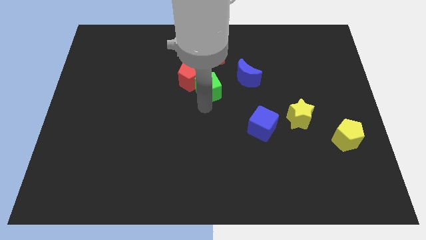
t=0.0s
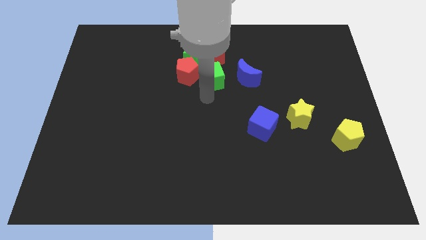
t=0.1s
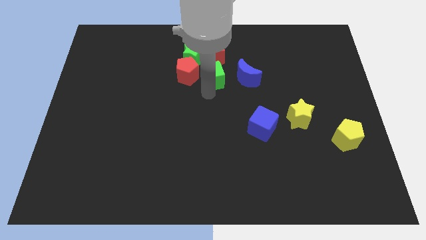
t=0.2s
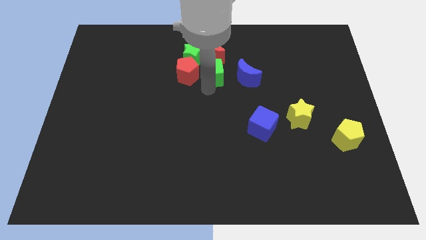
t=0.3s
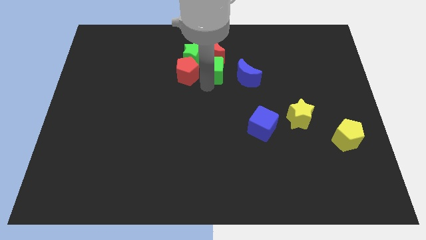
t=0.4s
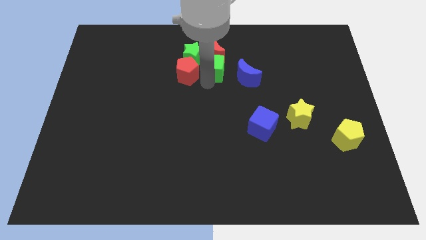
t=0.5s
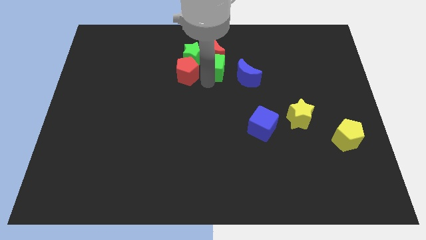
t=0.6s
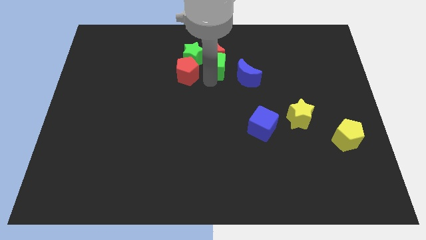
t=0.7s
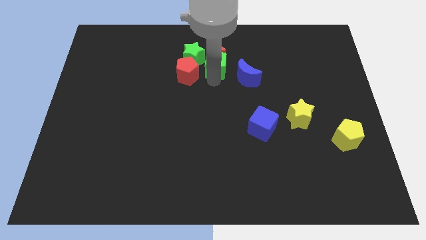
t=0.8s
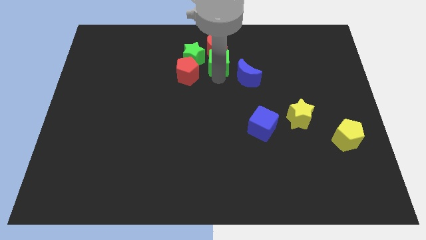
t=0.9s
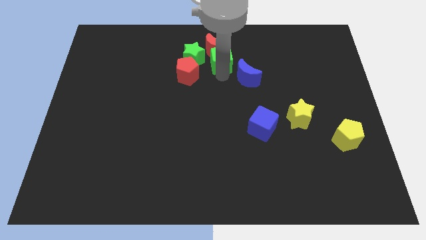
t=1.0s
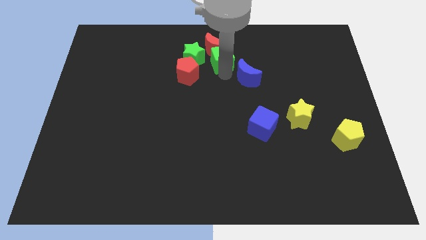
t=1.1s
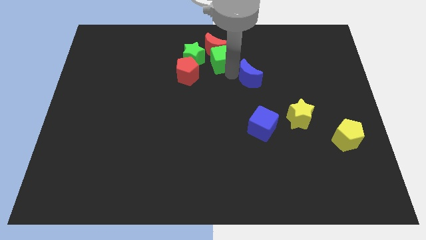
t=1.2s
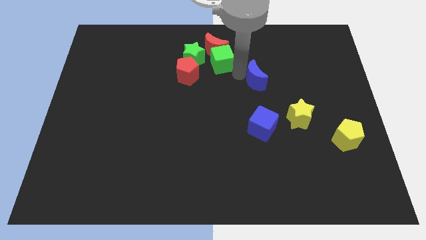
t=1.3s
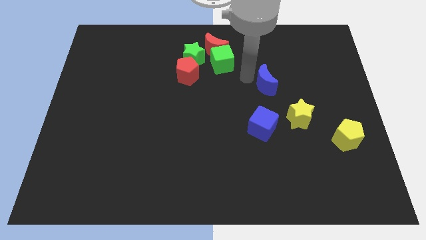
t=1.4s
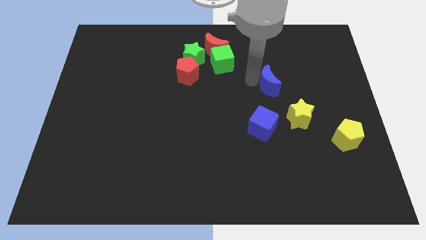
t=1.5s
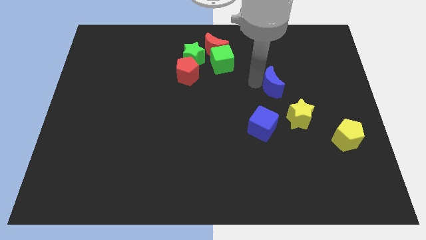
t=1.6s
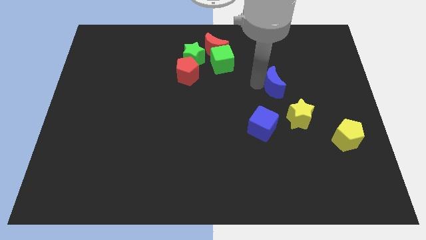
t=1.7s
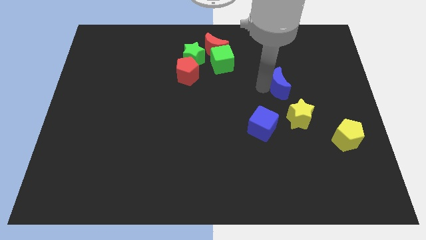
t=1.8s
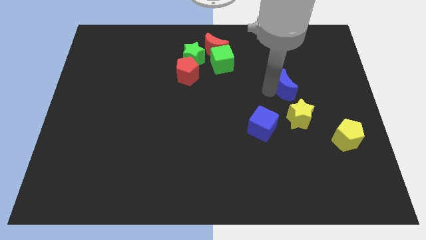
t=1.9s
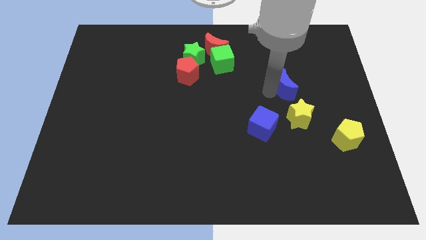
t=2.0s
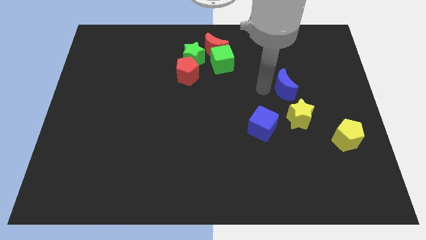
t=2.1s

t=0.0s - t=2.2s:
separate blue moon and green cube

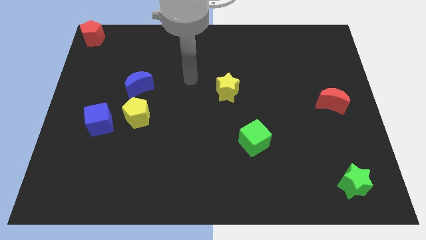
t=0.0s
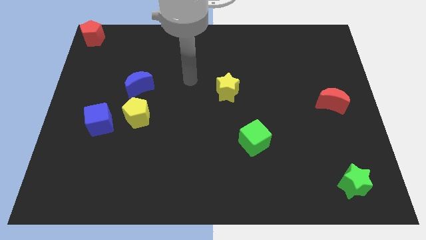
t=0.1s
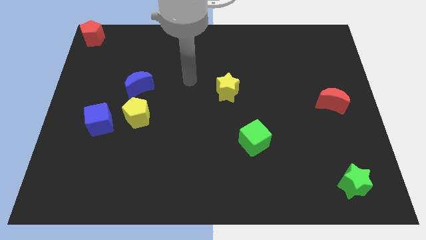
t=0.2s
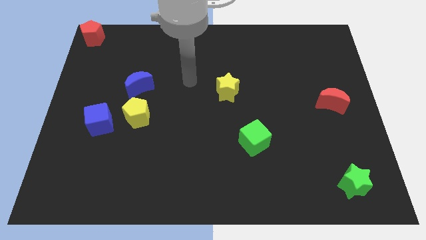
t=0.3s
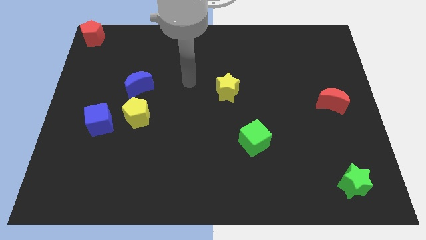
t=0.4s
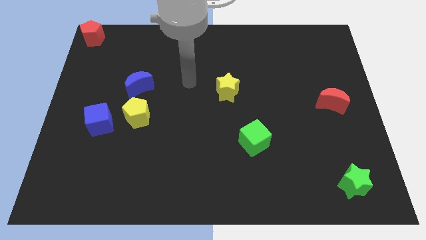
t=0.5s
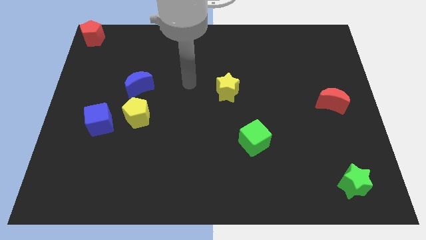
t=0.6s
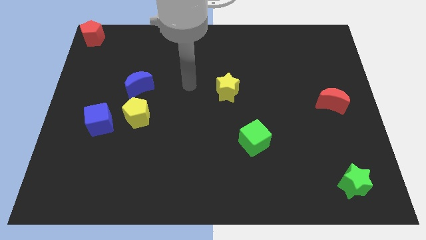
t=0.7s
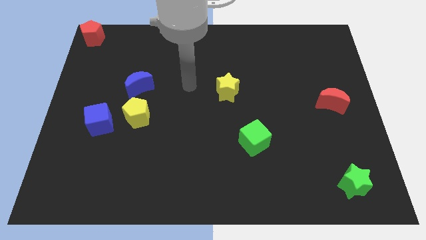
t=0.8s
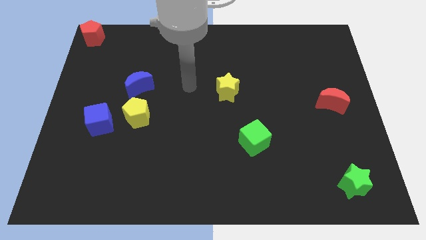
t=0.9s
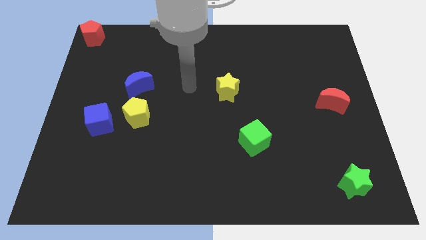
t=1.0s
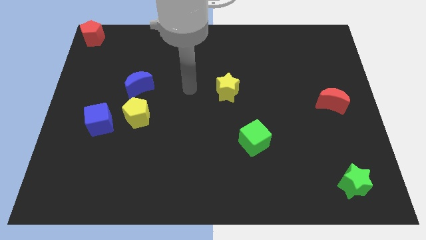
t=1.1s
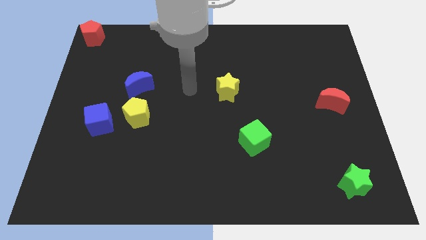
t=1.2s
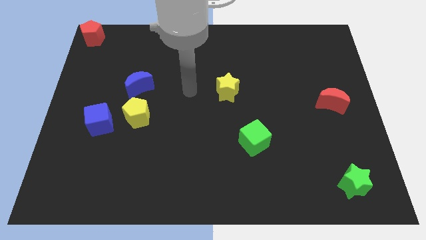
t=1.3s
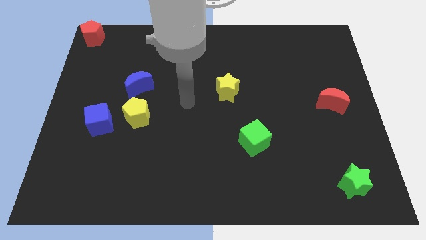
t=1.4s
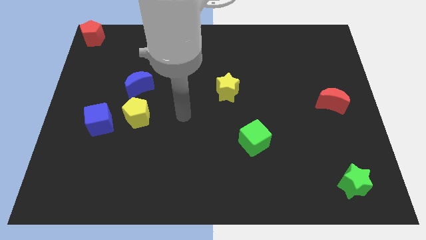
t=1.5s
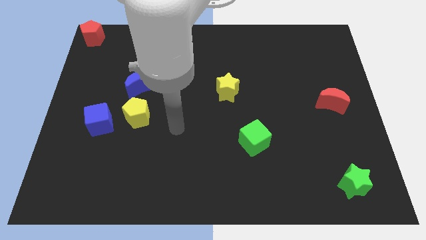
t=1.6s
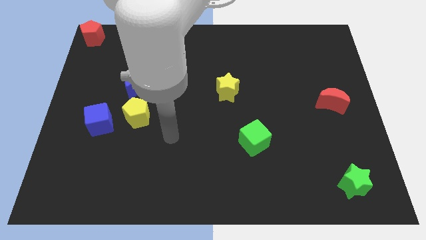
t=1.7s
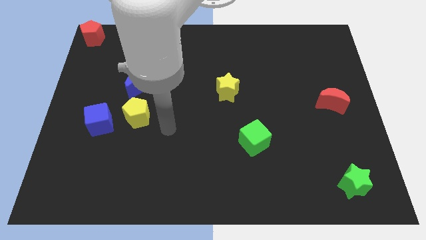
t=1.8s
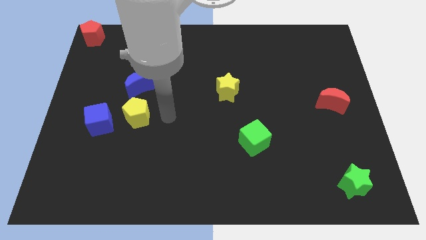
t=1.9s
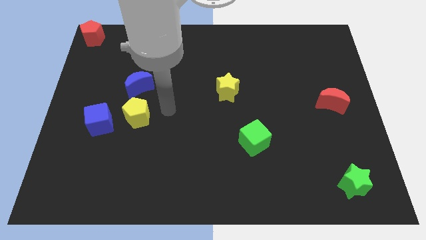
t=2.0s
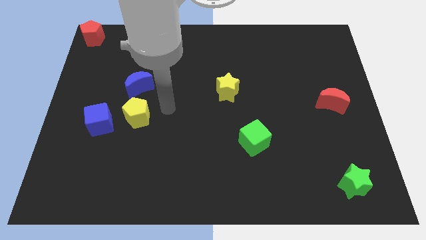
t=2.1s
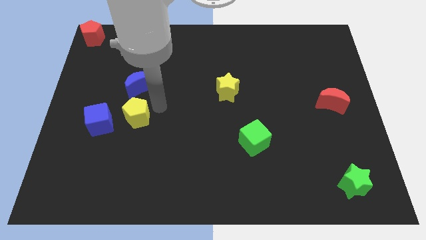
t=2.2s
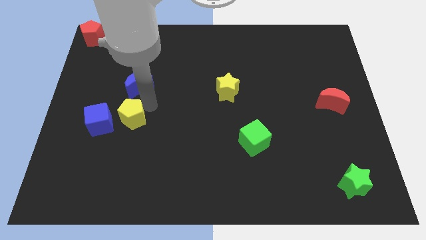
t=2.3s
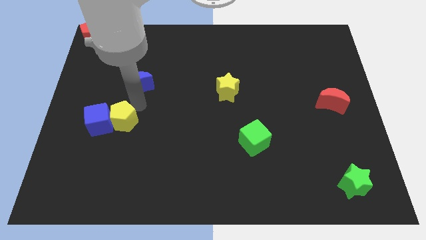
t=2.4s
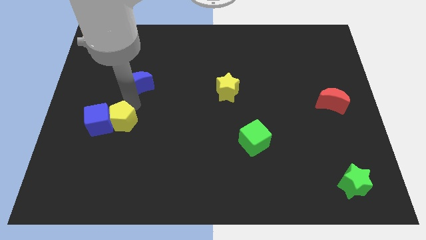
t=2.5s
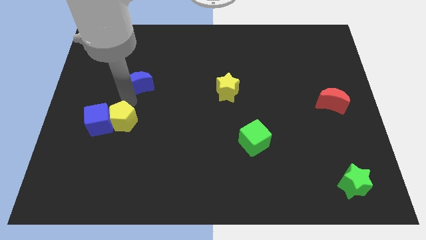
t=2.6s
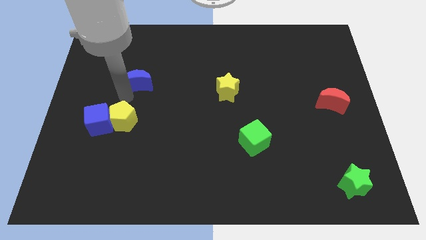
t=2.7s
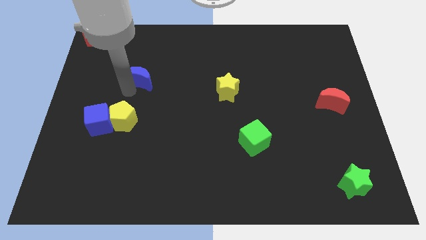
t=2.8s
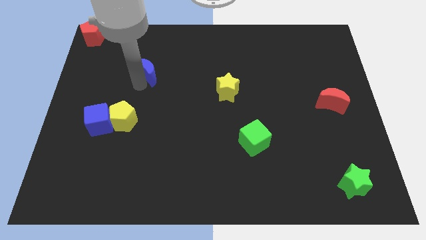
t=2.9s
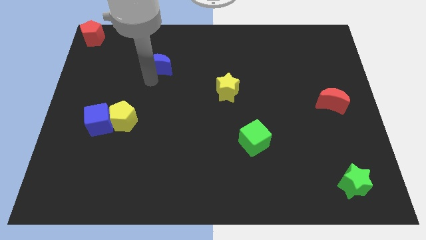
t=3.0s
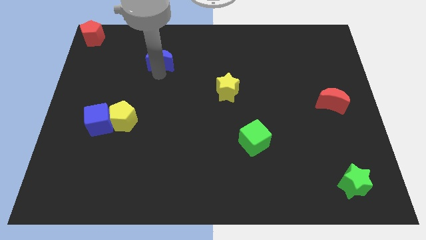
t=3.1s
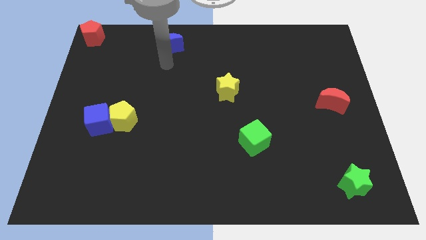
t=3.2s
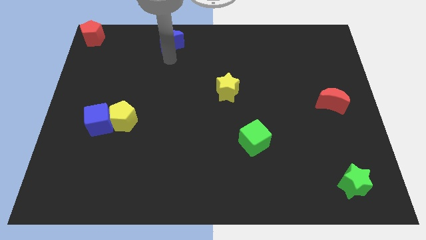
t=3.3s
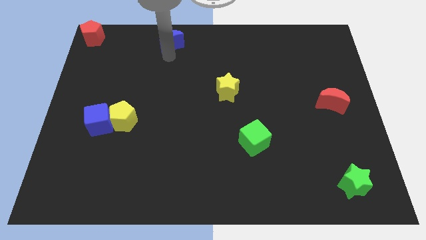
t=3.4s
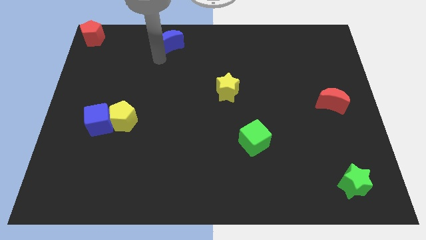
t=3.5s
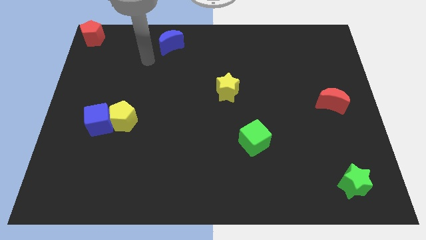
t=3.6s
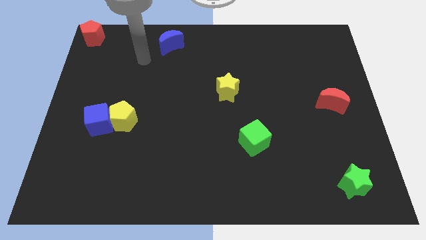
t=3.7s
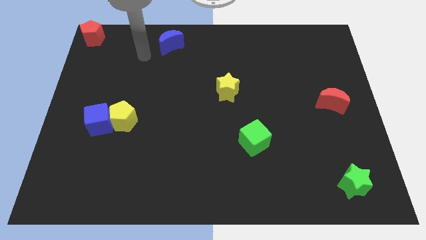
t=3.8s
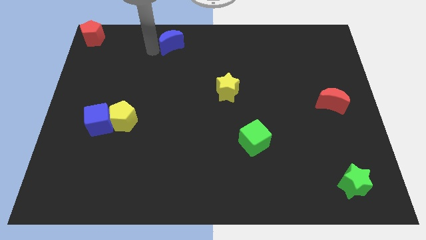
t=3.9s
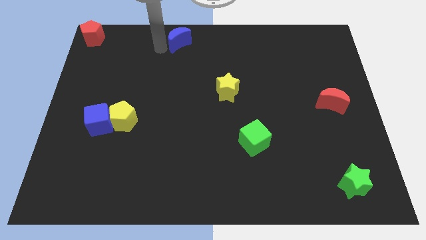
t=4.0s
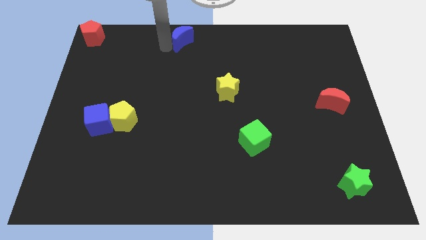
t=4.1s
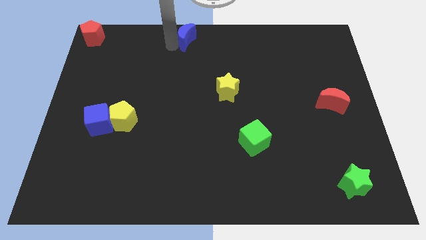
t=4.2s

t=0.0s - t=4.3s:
push the blue crescent to the top center of the board

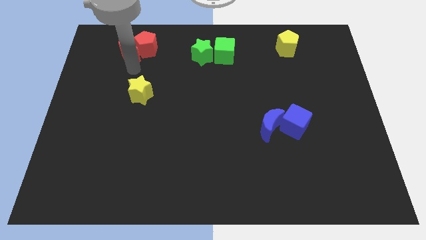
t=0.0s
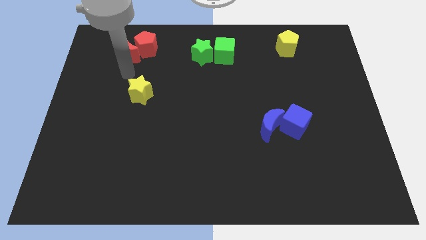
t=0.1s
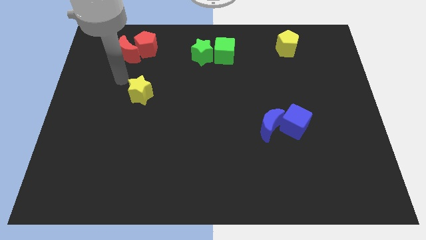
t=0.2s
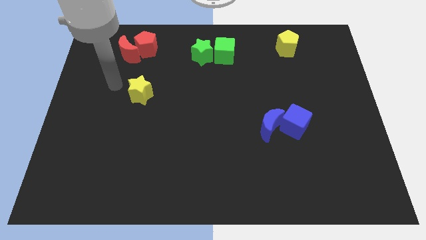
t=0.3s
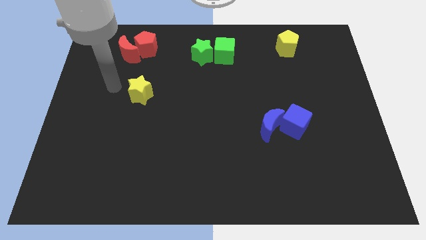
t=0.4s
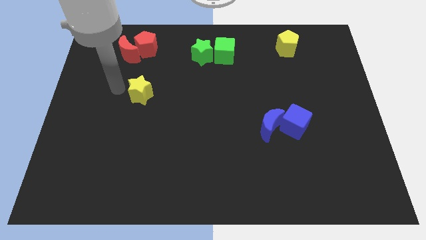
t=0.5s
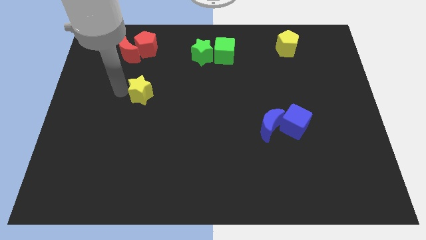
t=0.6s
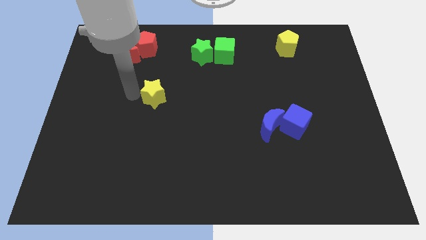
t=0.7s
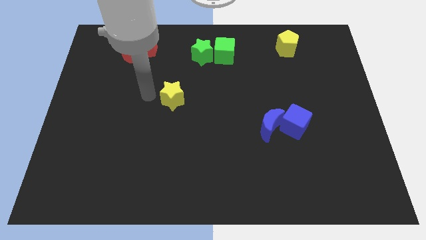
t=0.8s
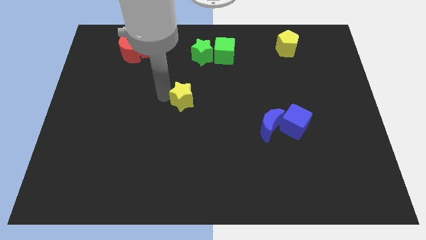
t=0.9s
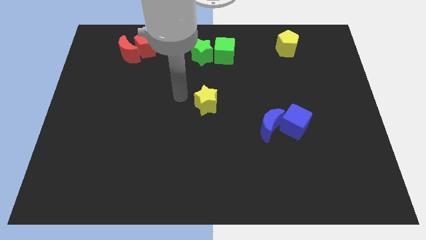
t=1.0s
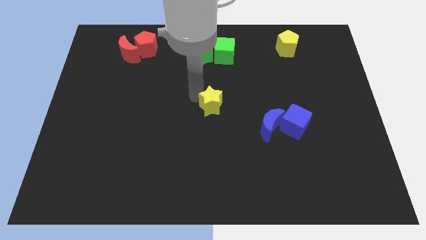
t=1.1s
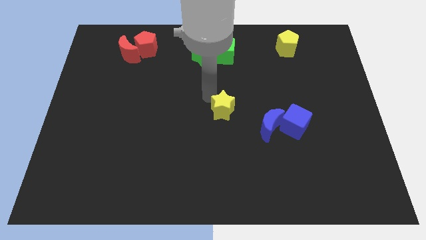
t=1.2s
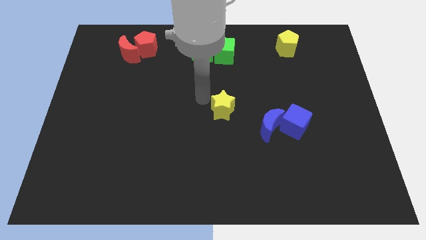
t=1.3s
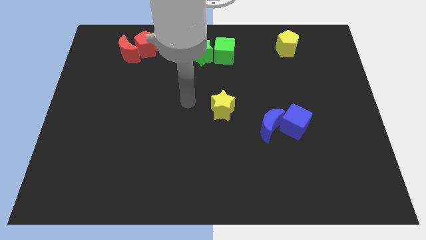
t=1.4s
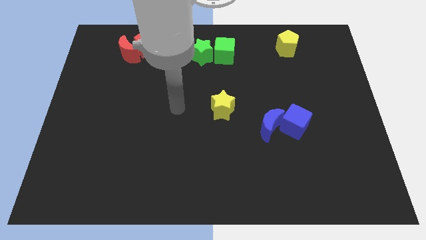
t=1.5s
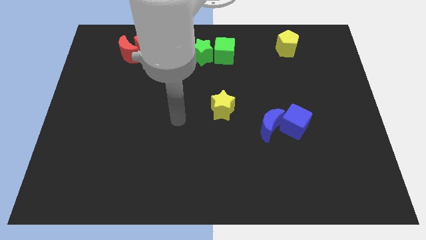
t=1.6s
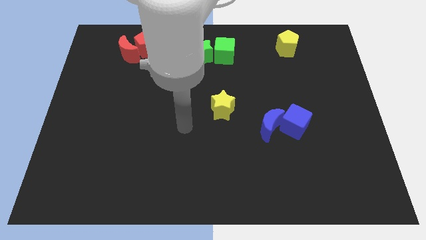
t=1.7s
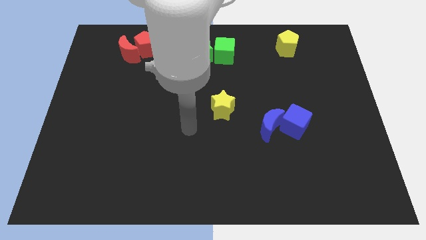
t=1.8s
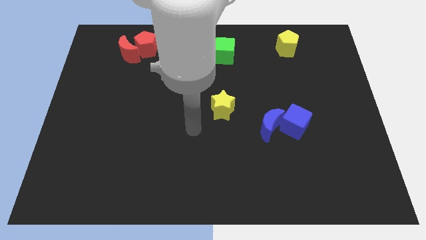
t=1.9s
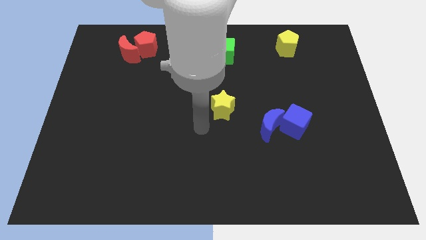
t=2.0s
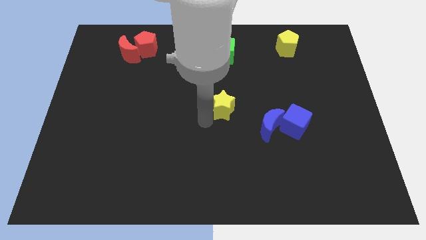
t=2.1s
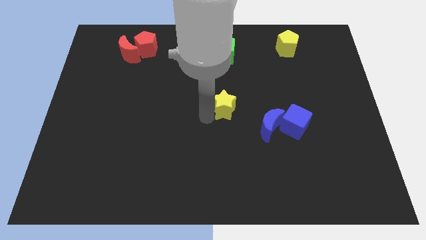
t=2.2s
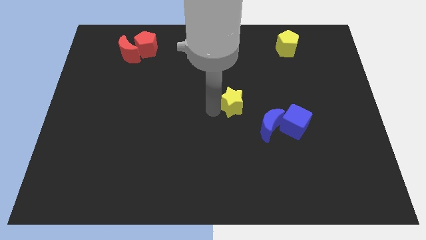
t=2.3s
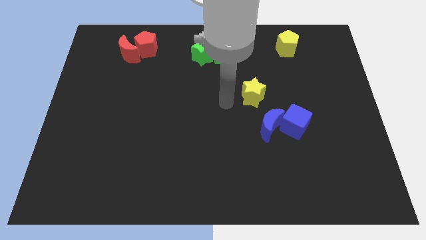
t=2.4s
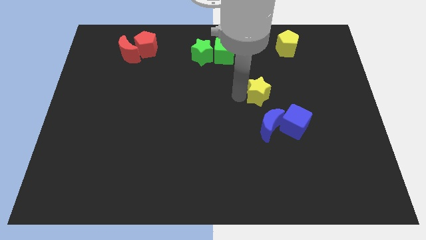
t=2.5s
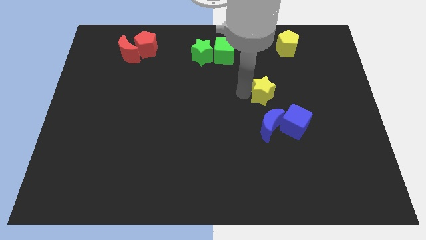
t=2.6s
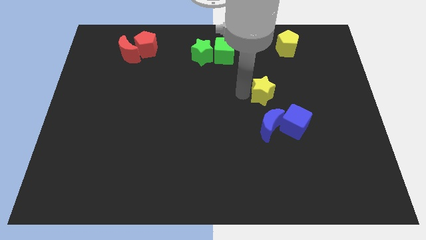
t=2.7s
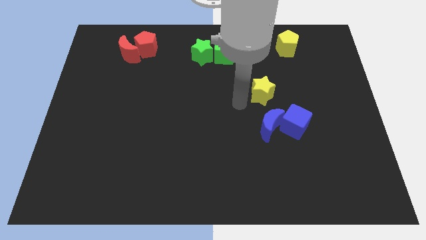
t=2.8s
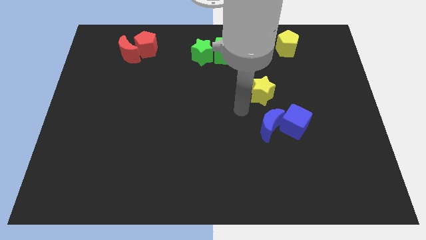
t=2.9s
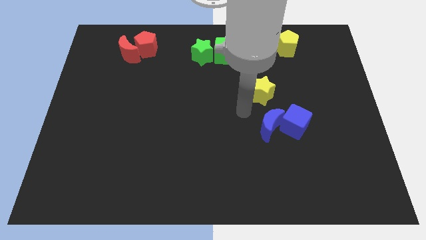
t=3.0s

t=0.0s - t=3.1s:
place yellow star above blue moon
